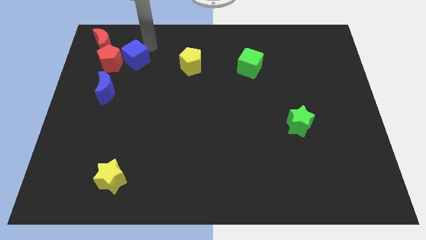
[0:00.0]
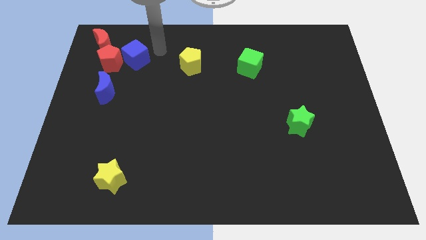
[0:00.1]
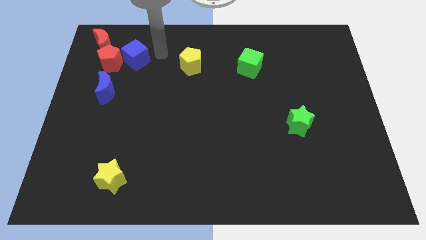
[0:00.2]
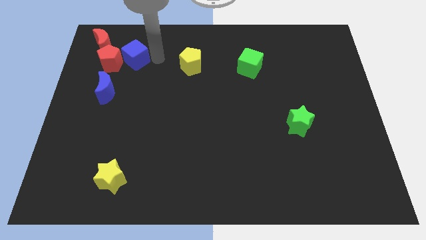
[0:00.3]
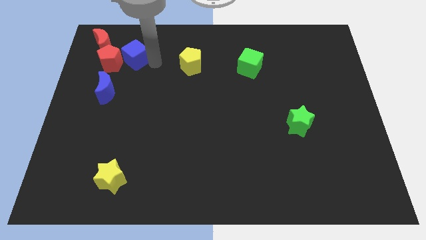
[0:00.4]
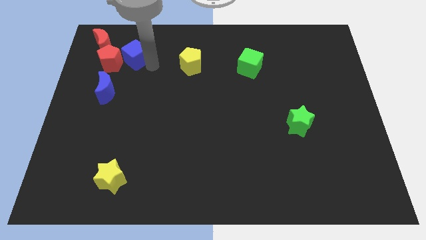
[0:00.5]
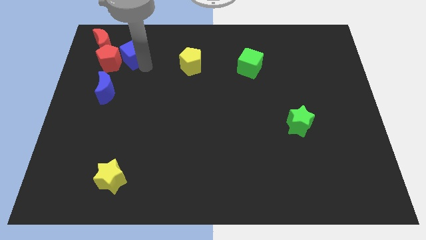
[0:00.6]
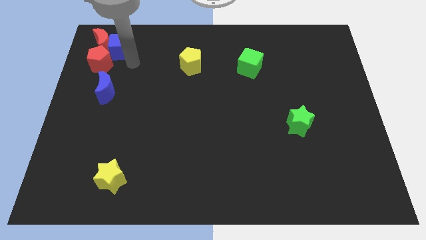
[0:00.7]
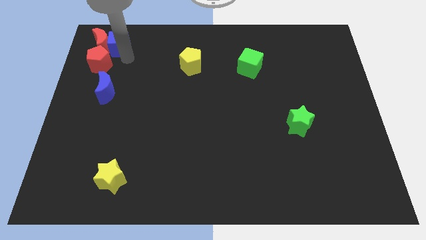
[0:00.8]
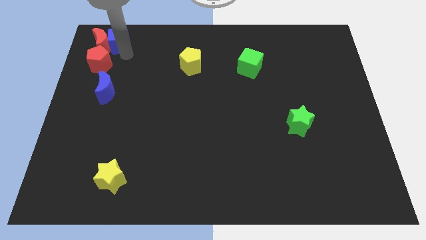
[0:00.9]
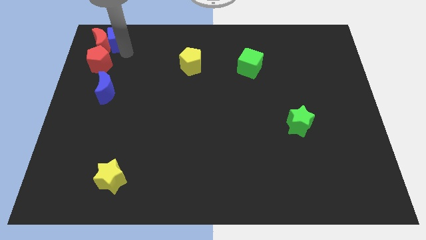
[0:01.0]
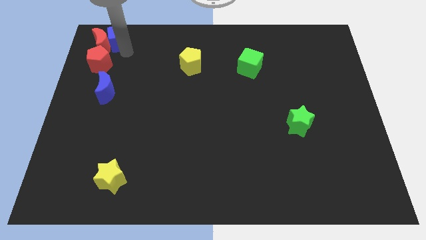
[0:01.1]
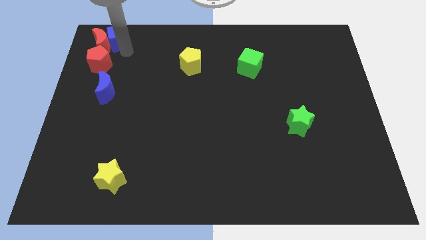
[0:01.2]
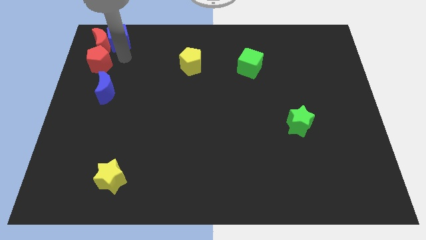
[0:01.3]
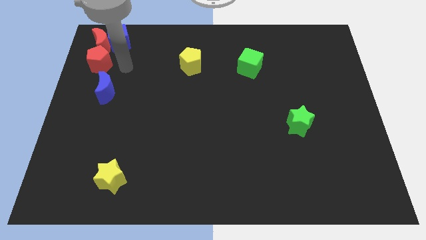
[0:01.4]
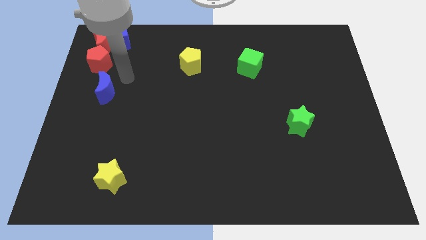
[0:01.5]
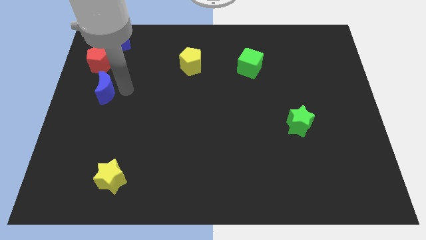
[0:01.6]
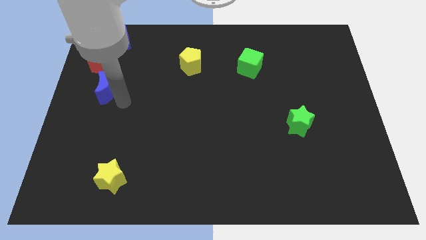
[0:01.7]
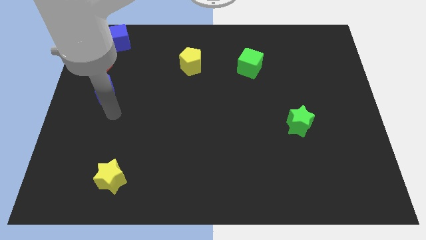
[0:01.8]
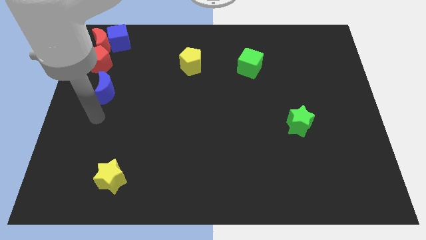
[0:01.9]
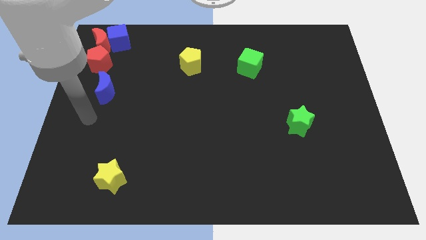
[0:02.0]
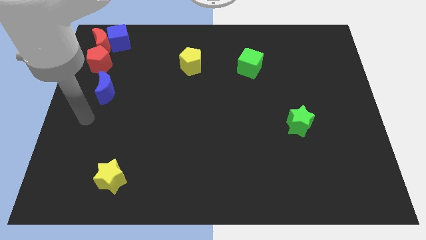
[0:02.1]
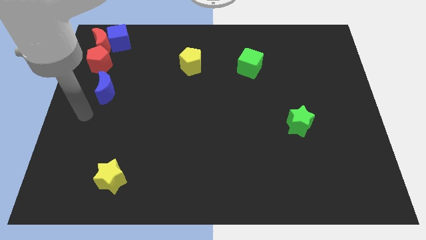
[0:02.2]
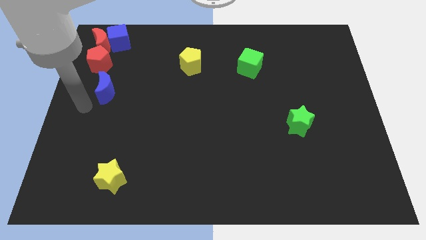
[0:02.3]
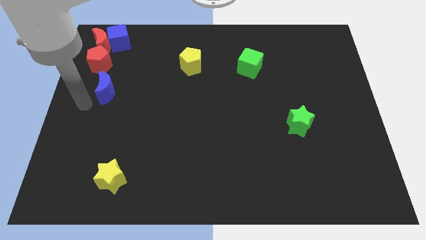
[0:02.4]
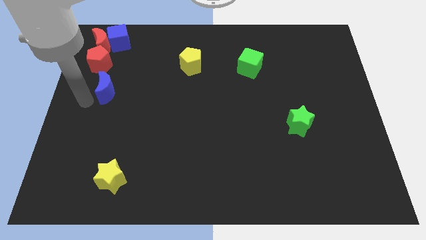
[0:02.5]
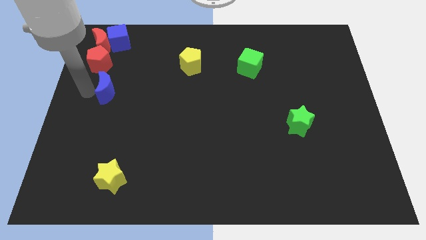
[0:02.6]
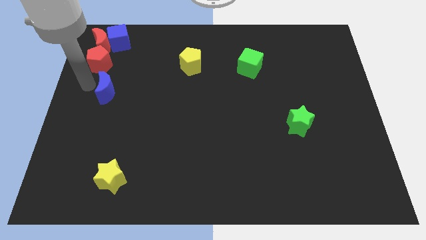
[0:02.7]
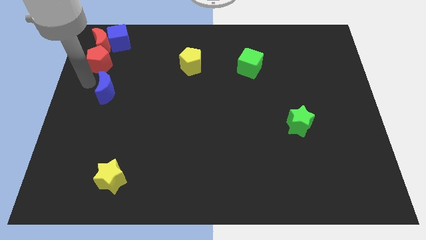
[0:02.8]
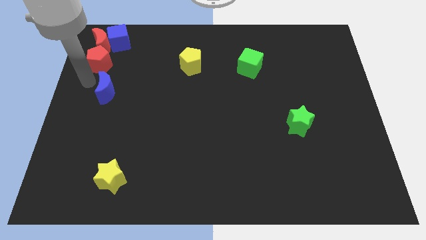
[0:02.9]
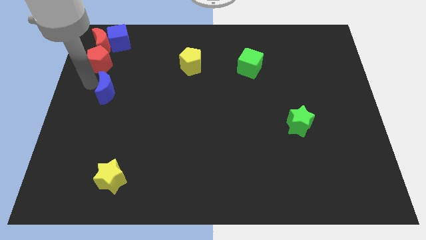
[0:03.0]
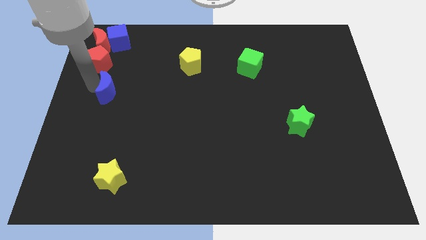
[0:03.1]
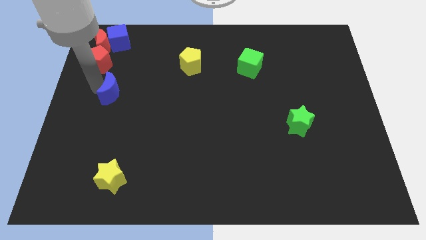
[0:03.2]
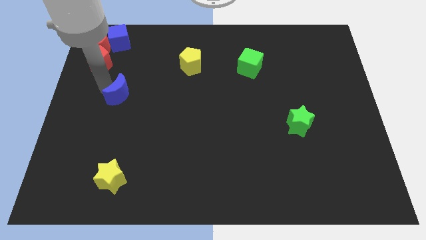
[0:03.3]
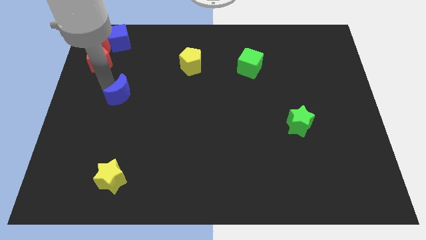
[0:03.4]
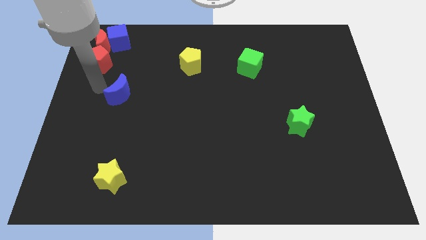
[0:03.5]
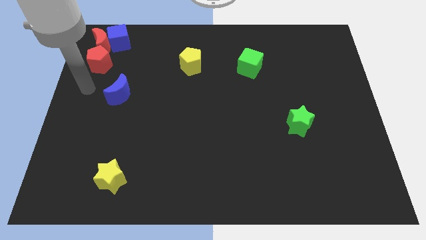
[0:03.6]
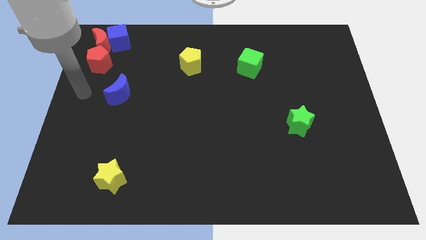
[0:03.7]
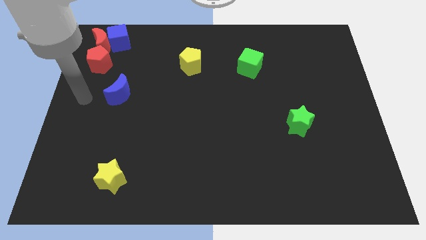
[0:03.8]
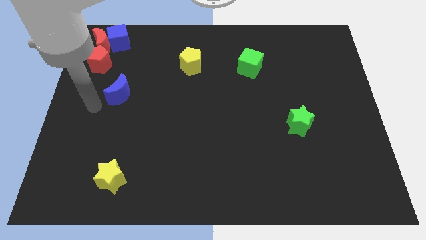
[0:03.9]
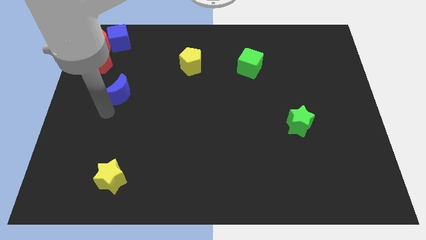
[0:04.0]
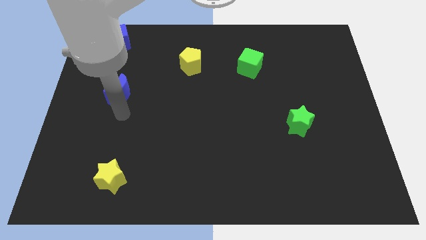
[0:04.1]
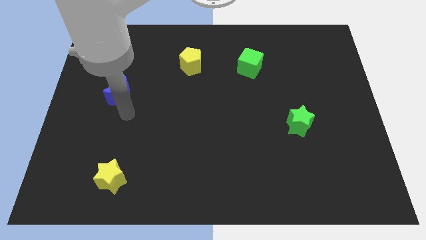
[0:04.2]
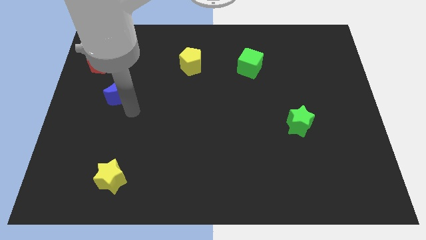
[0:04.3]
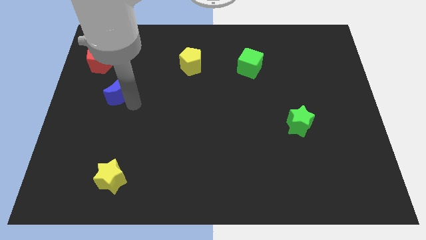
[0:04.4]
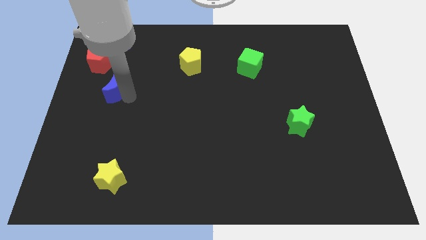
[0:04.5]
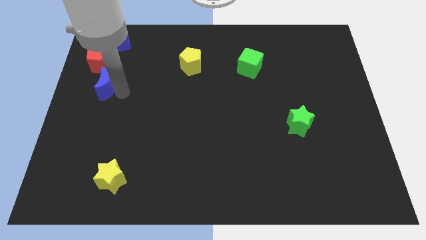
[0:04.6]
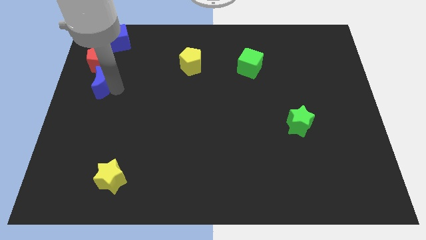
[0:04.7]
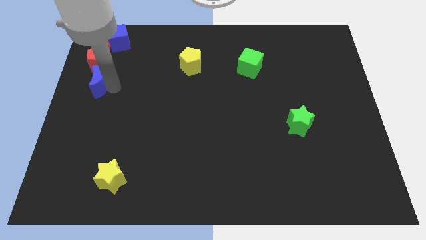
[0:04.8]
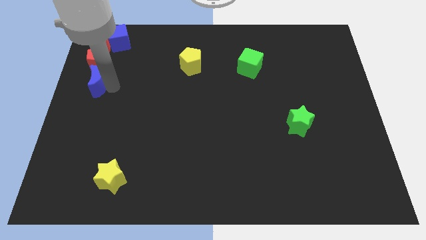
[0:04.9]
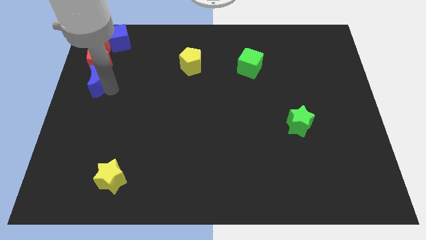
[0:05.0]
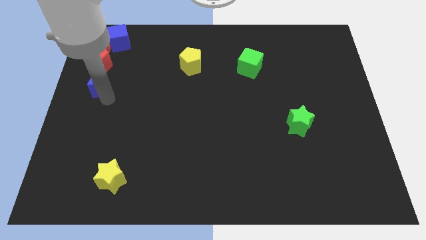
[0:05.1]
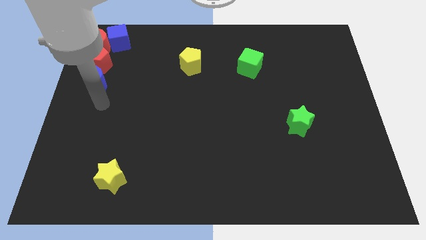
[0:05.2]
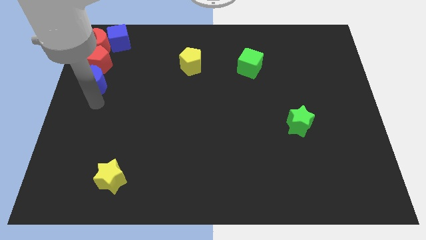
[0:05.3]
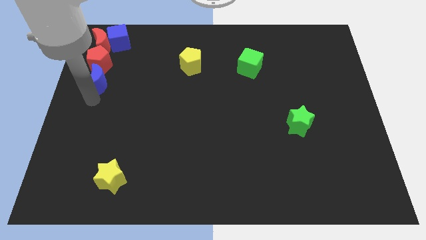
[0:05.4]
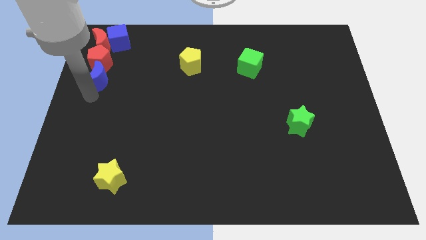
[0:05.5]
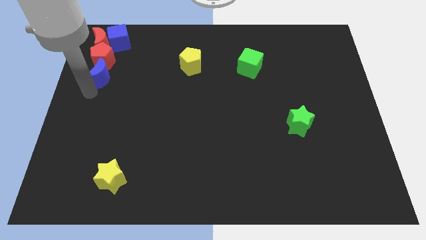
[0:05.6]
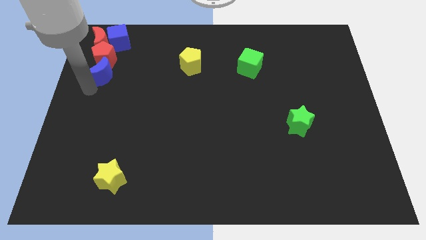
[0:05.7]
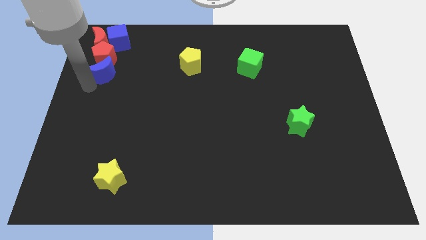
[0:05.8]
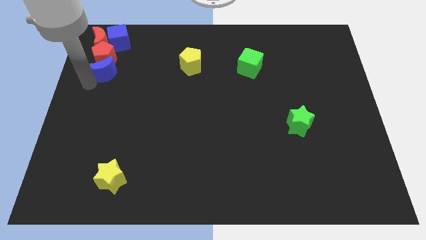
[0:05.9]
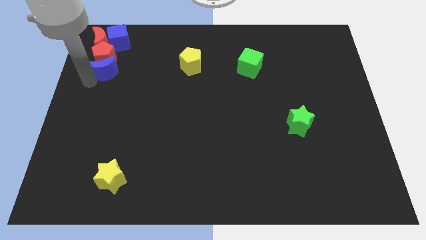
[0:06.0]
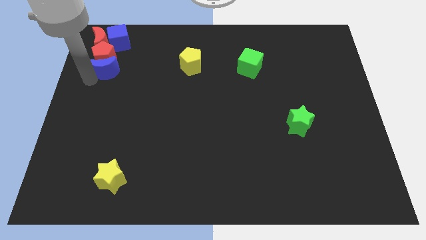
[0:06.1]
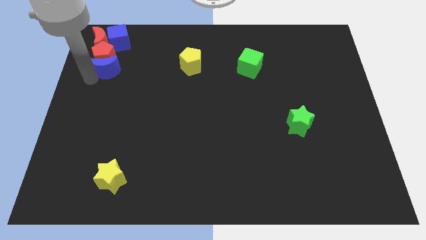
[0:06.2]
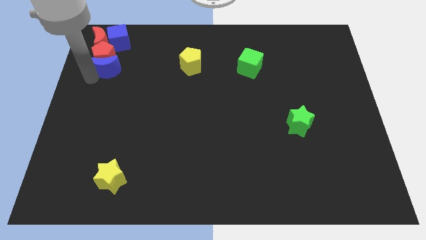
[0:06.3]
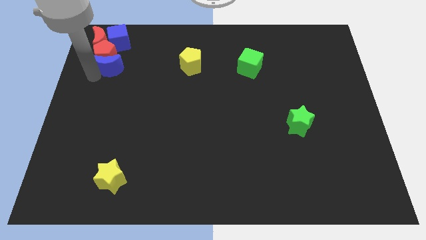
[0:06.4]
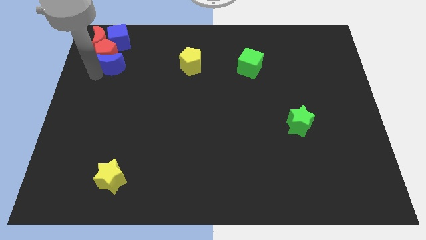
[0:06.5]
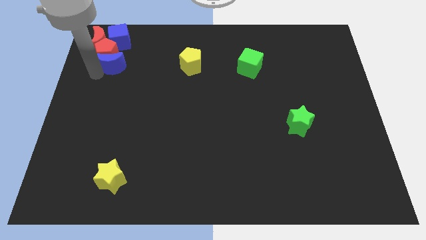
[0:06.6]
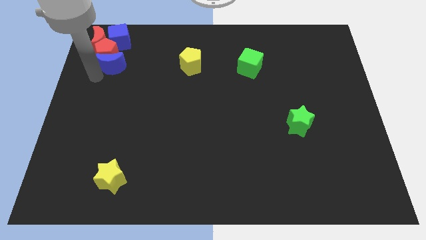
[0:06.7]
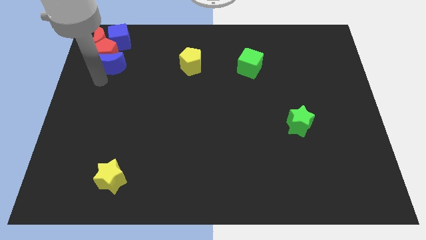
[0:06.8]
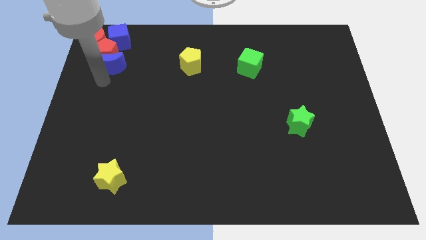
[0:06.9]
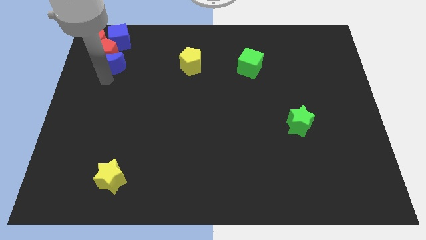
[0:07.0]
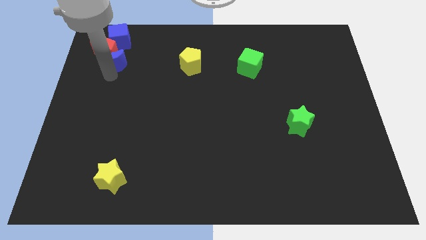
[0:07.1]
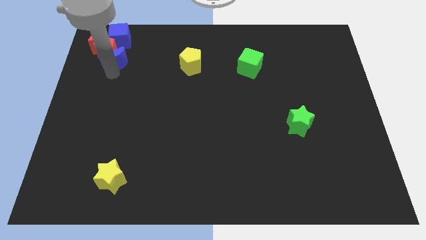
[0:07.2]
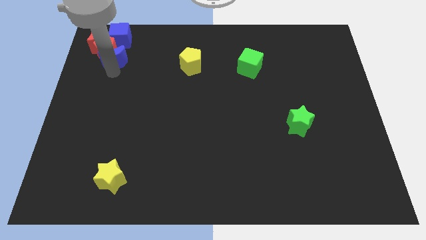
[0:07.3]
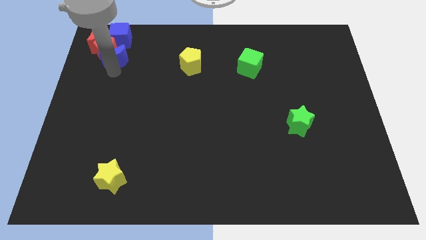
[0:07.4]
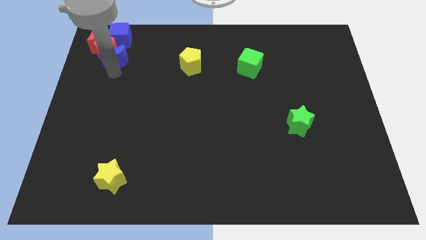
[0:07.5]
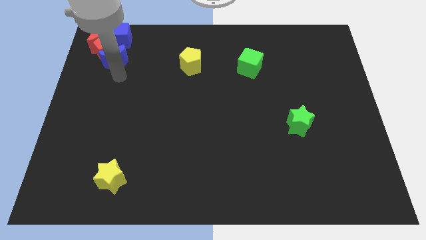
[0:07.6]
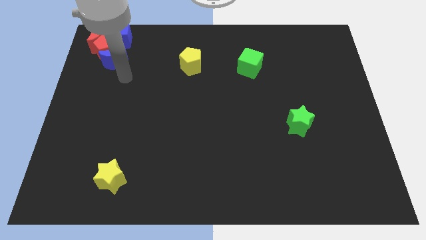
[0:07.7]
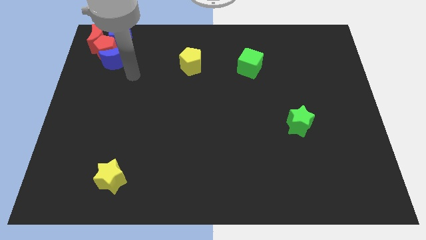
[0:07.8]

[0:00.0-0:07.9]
push a group of blocks to the top left corner of the board

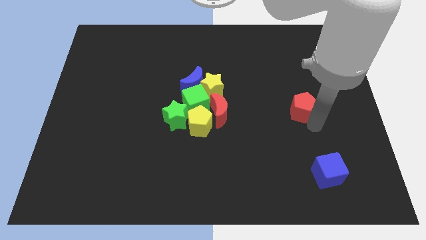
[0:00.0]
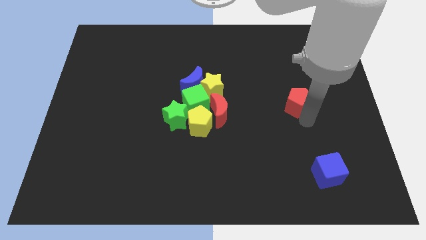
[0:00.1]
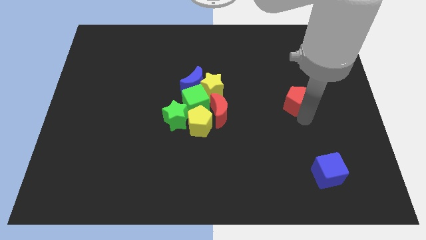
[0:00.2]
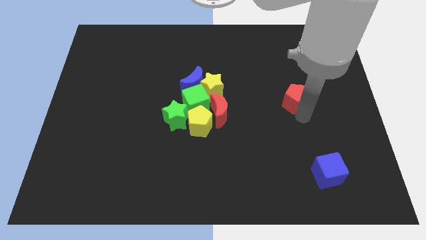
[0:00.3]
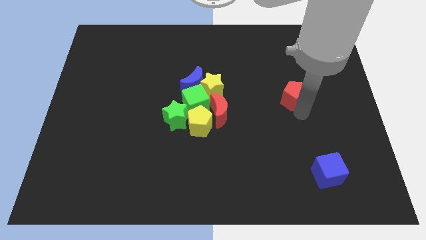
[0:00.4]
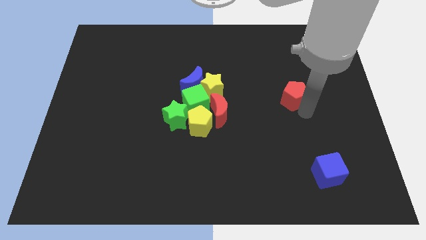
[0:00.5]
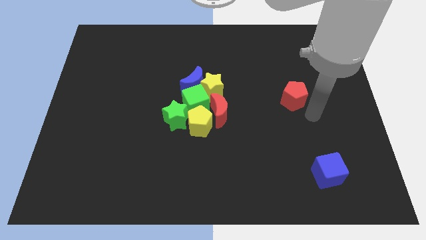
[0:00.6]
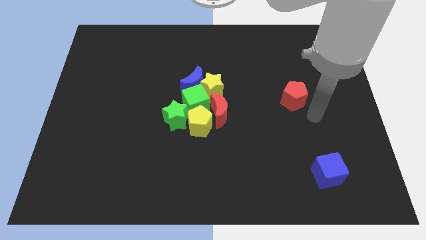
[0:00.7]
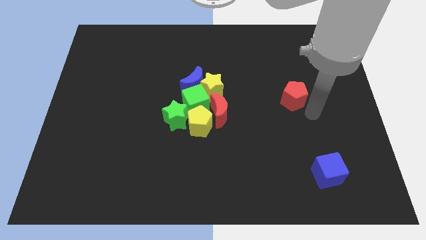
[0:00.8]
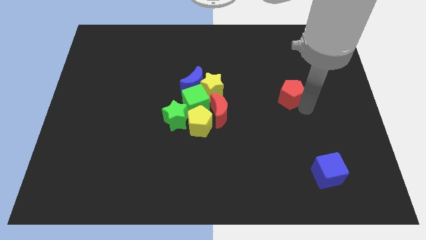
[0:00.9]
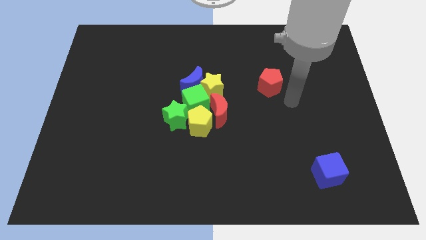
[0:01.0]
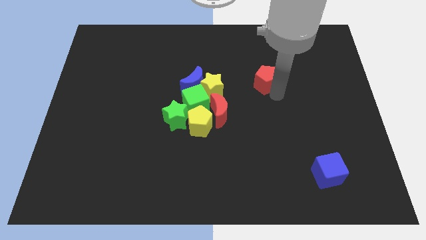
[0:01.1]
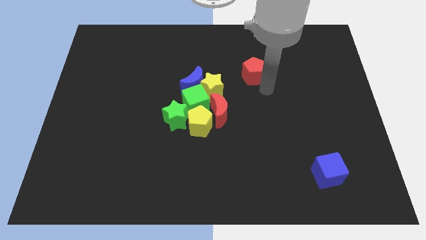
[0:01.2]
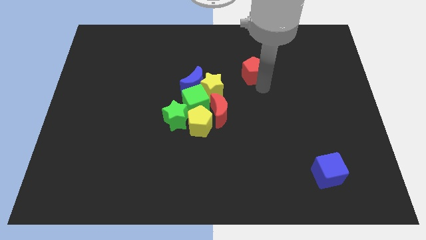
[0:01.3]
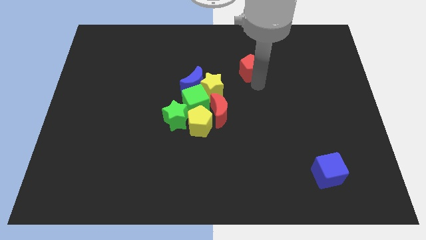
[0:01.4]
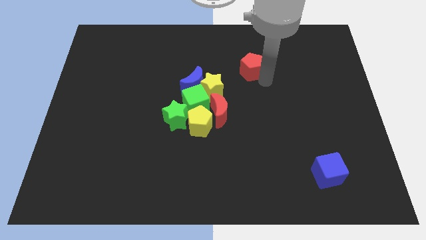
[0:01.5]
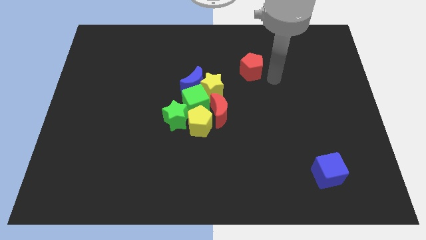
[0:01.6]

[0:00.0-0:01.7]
drag the red pentagon slightly upwards
